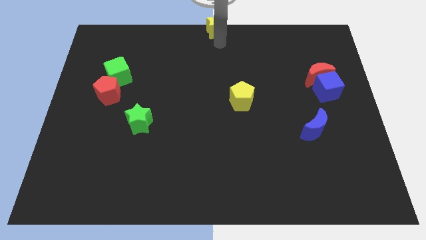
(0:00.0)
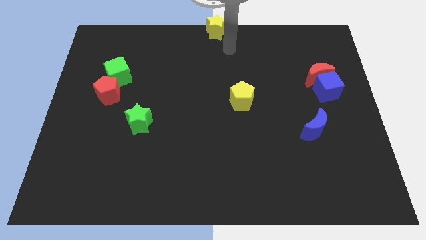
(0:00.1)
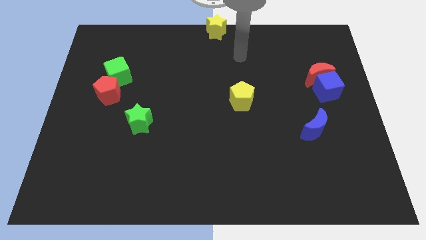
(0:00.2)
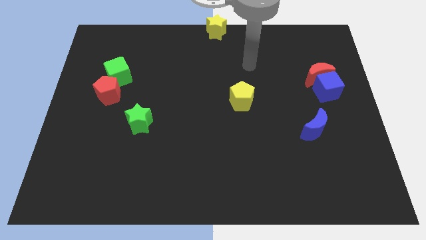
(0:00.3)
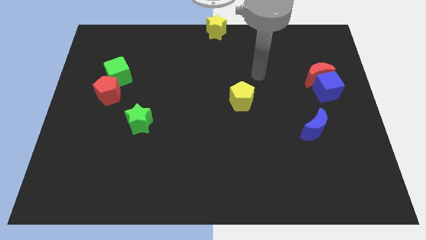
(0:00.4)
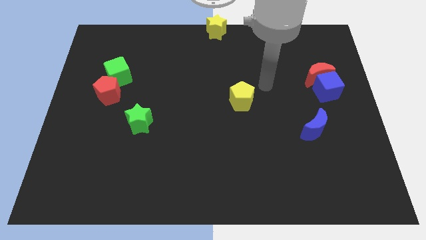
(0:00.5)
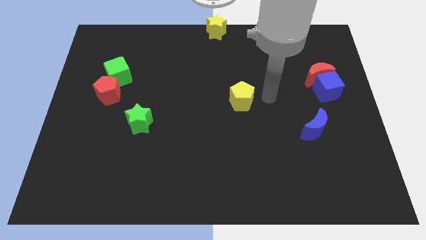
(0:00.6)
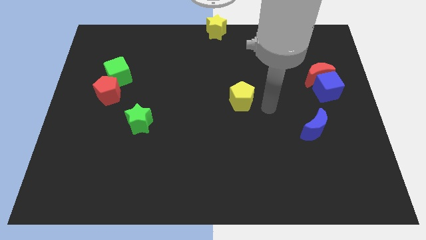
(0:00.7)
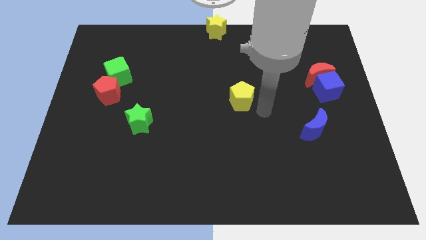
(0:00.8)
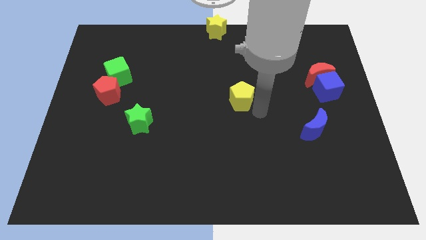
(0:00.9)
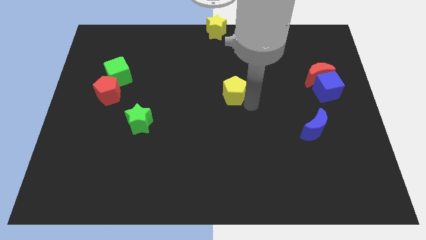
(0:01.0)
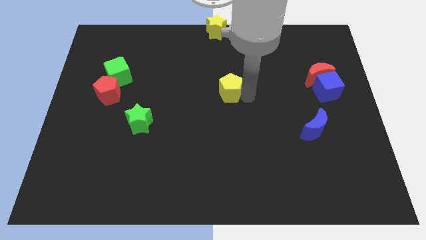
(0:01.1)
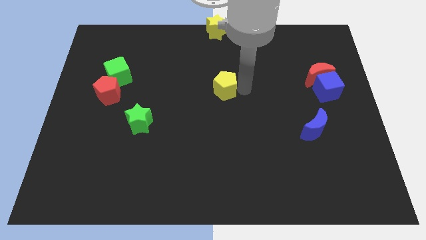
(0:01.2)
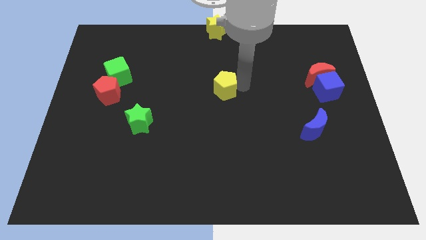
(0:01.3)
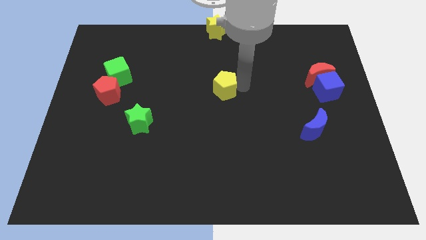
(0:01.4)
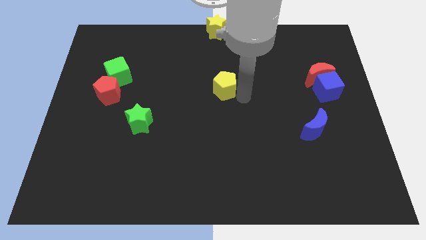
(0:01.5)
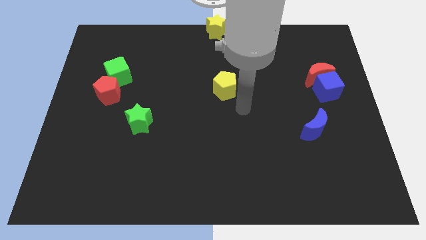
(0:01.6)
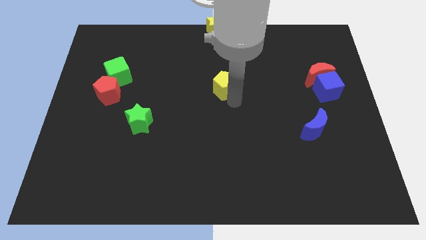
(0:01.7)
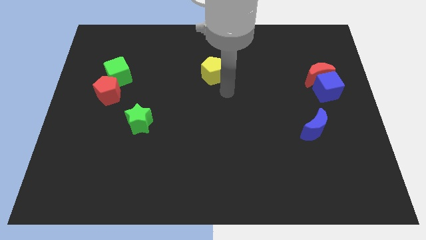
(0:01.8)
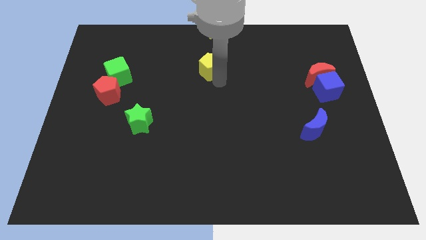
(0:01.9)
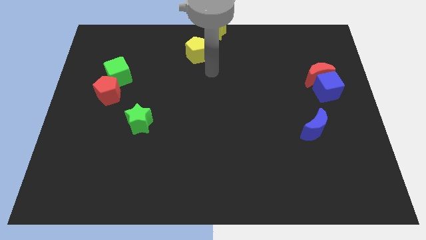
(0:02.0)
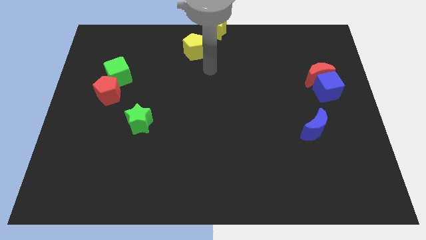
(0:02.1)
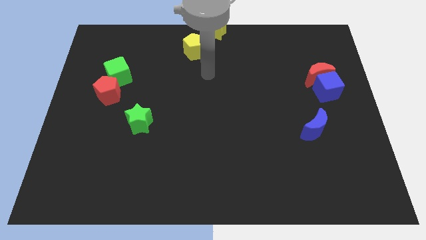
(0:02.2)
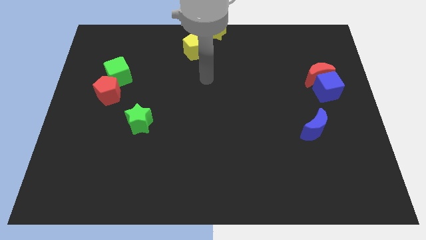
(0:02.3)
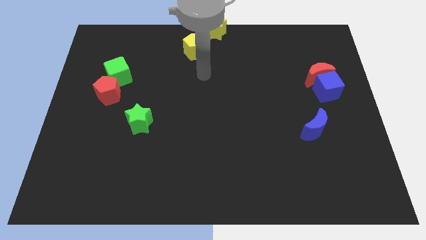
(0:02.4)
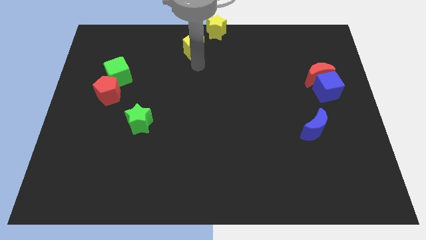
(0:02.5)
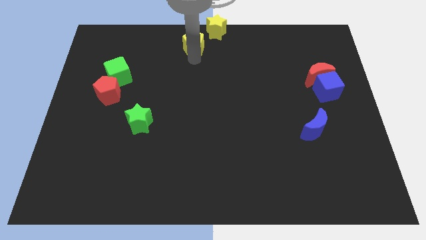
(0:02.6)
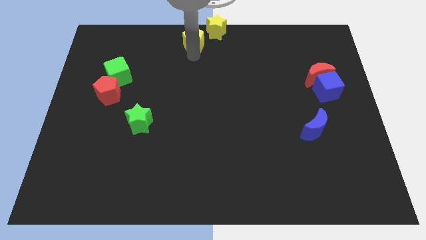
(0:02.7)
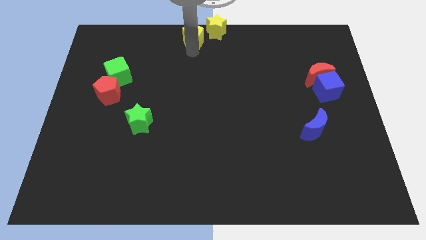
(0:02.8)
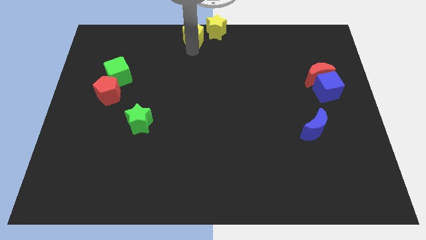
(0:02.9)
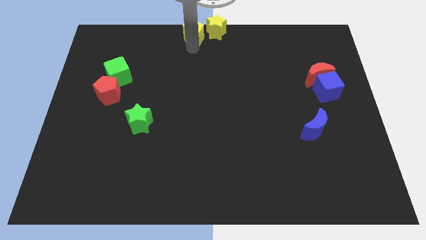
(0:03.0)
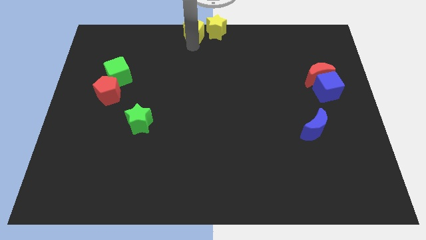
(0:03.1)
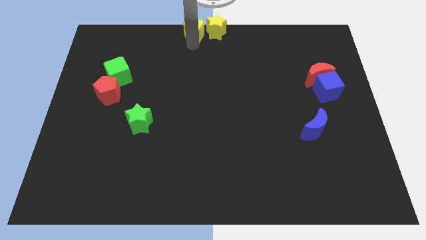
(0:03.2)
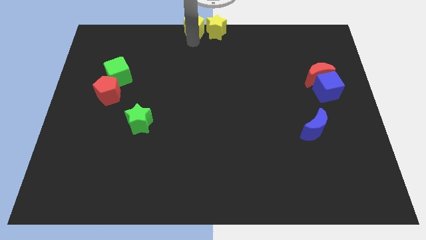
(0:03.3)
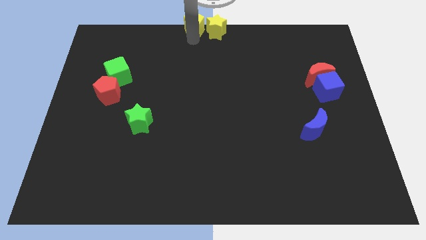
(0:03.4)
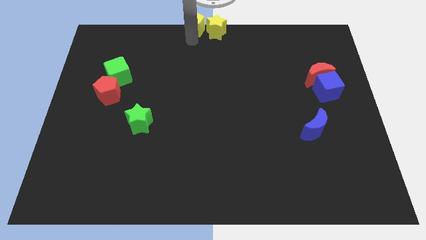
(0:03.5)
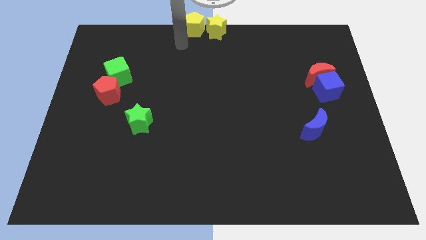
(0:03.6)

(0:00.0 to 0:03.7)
place the yellow pentagon on the left side of the yellow star

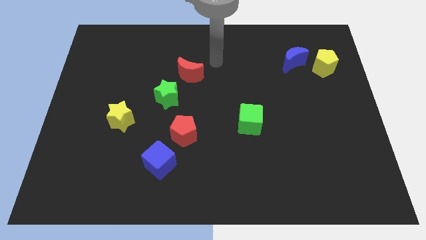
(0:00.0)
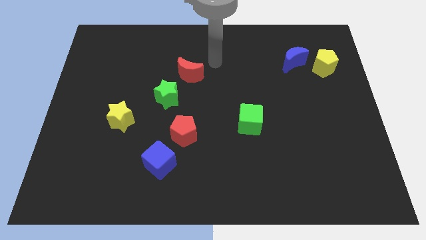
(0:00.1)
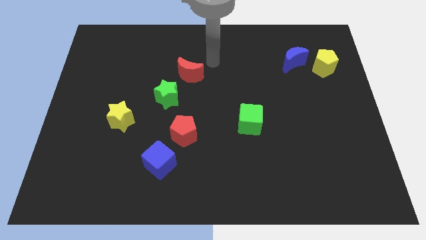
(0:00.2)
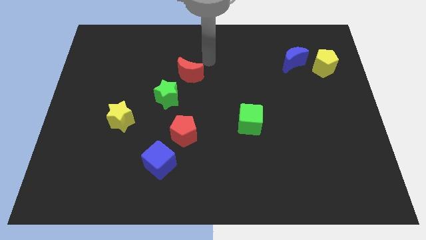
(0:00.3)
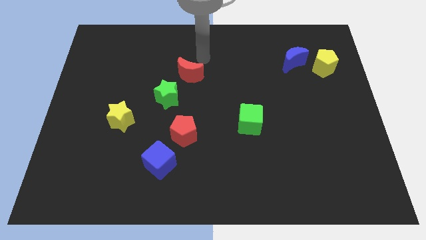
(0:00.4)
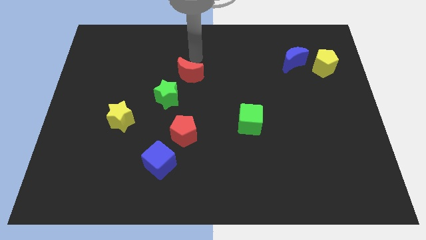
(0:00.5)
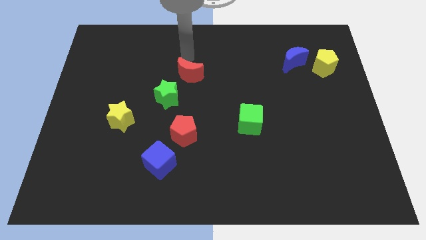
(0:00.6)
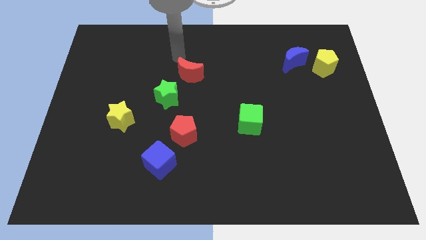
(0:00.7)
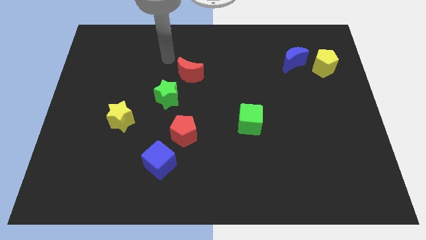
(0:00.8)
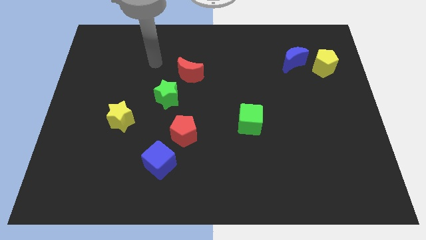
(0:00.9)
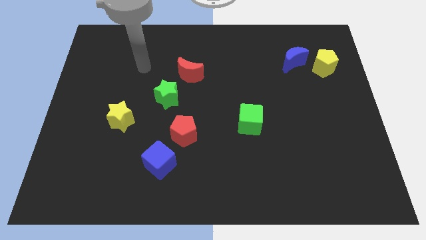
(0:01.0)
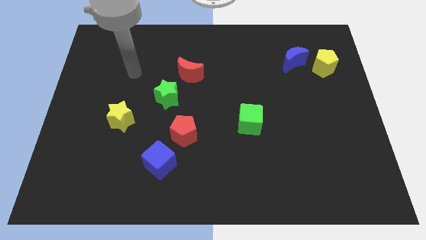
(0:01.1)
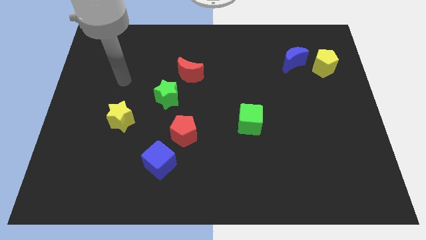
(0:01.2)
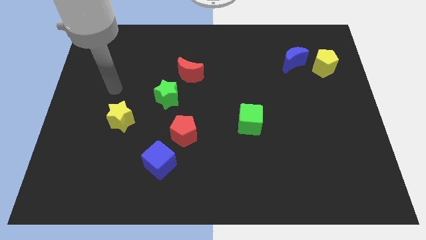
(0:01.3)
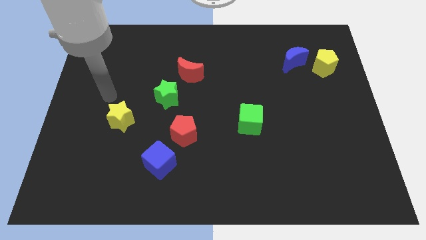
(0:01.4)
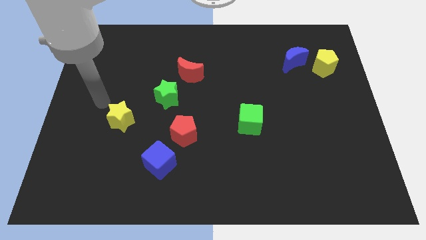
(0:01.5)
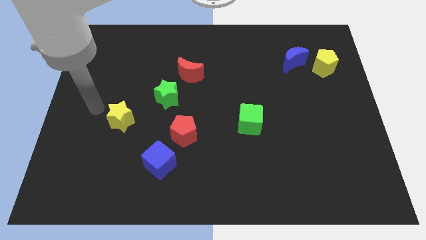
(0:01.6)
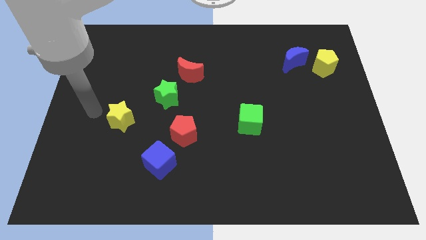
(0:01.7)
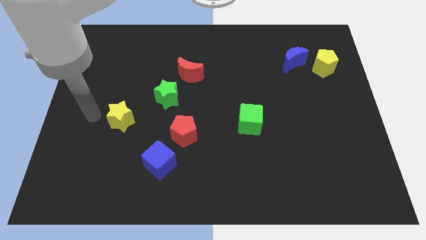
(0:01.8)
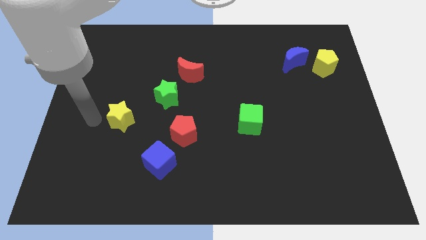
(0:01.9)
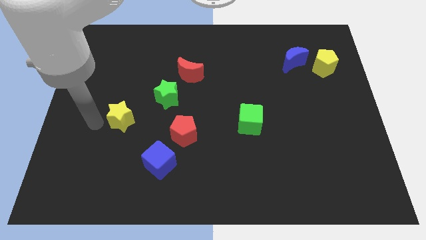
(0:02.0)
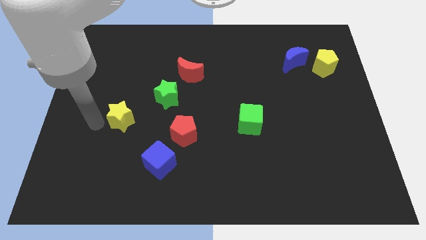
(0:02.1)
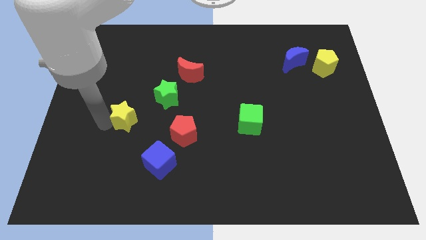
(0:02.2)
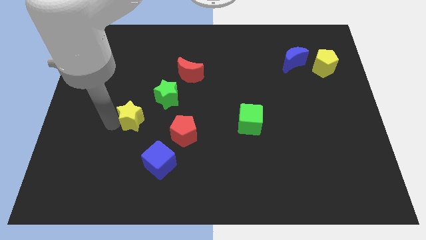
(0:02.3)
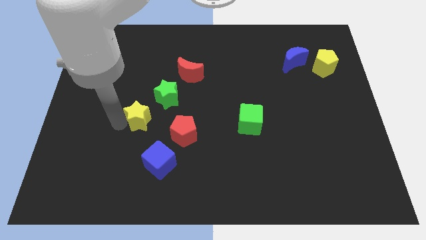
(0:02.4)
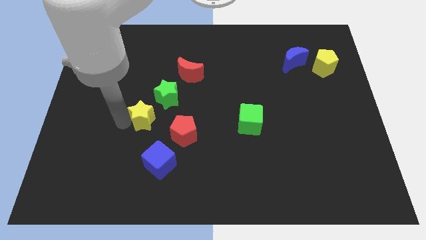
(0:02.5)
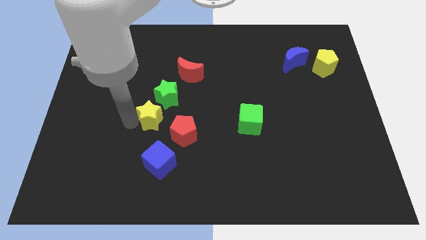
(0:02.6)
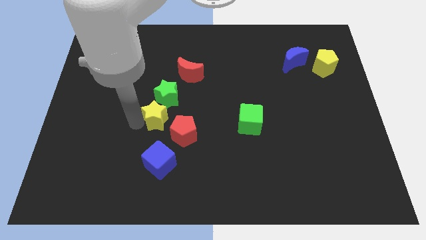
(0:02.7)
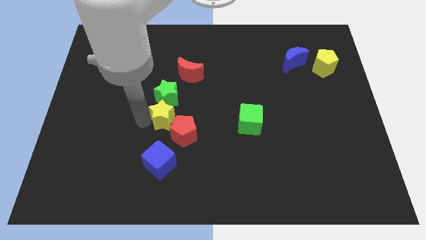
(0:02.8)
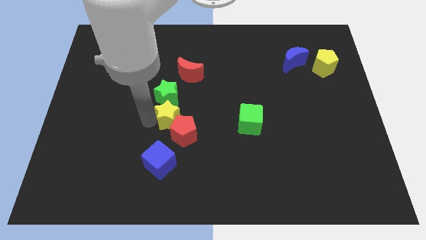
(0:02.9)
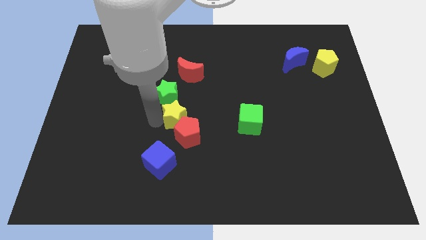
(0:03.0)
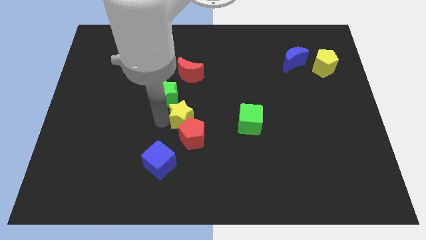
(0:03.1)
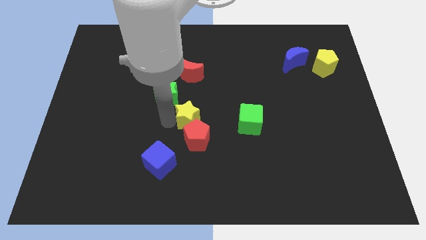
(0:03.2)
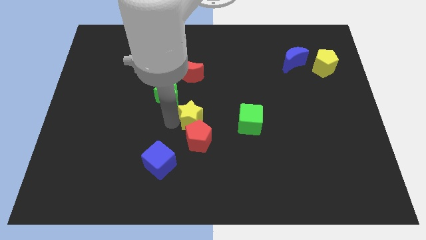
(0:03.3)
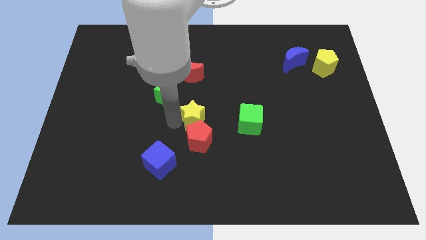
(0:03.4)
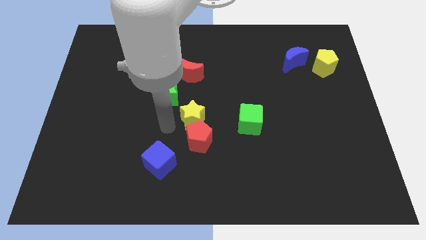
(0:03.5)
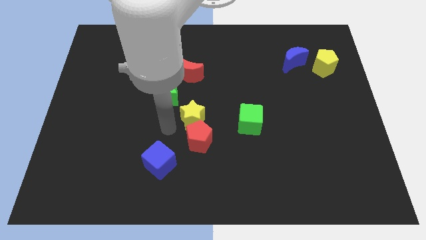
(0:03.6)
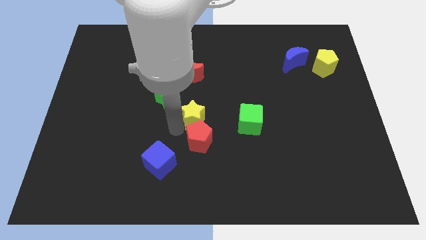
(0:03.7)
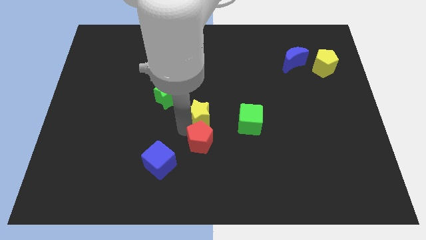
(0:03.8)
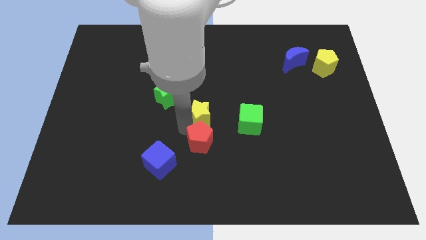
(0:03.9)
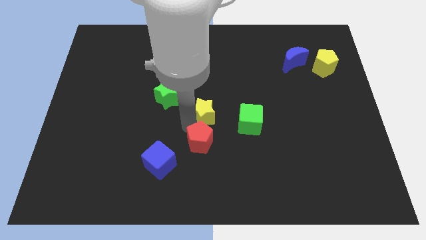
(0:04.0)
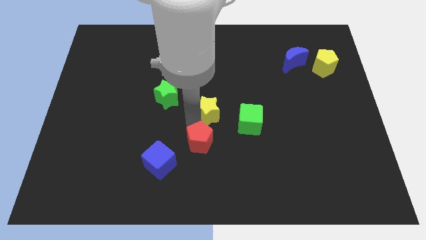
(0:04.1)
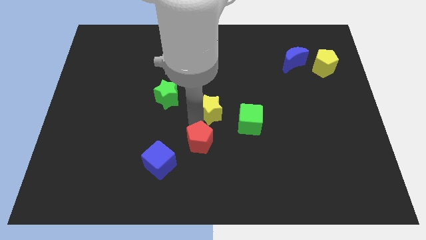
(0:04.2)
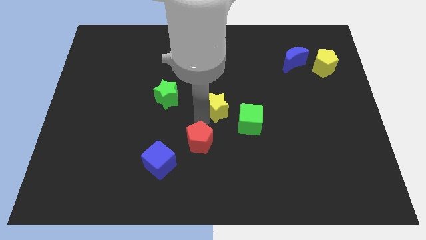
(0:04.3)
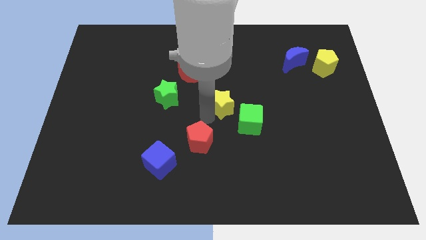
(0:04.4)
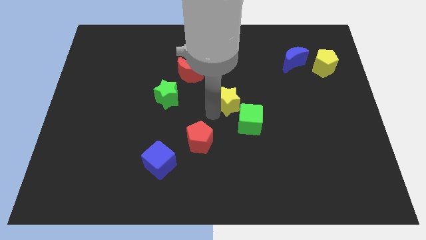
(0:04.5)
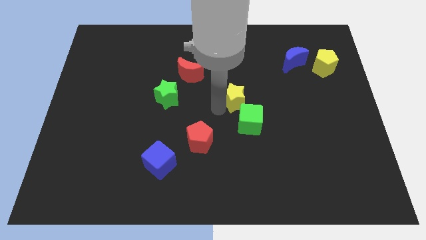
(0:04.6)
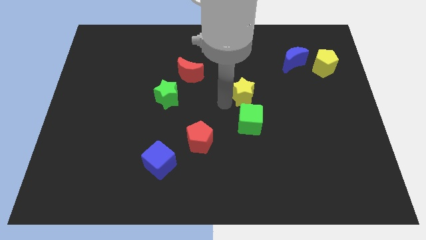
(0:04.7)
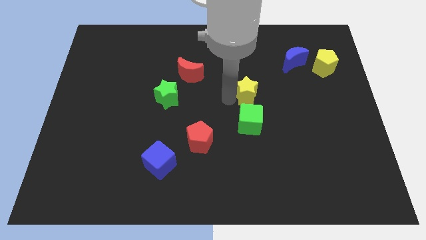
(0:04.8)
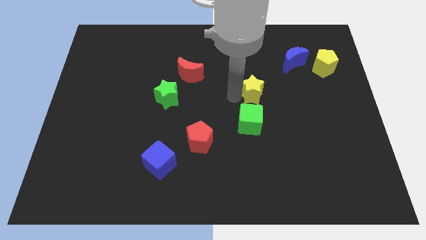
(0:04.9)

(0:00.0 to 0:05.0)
push the yellow star above to the green cube
